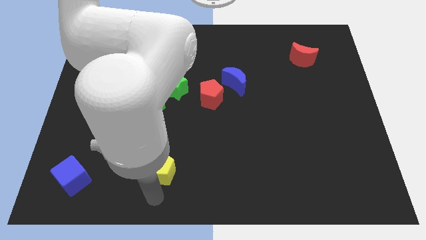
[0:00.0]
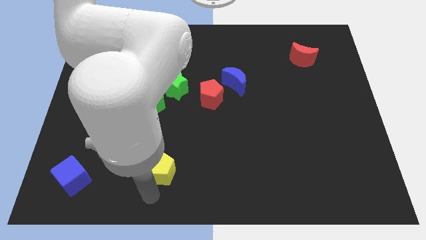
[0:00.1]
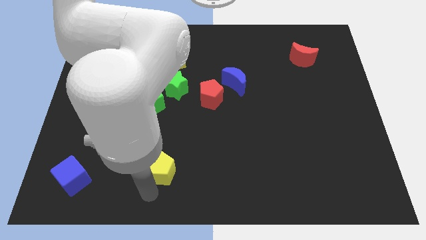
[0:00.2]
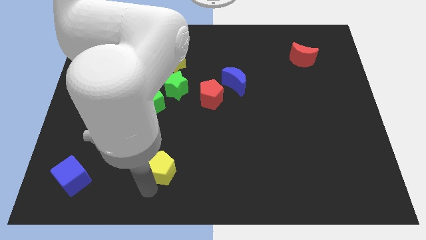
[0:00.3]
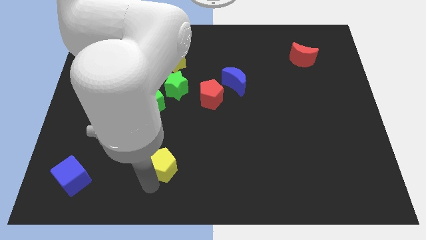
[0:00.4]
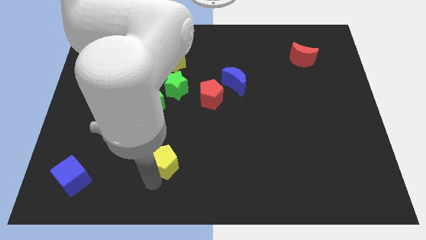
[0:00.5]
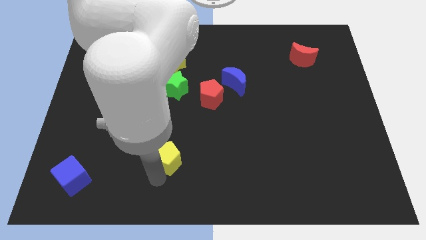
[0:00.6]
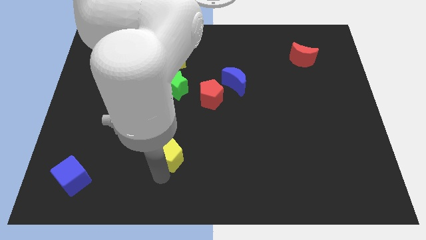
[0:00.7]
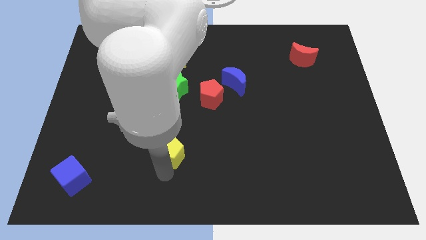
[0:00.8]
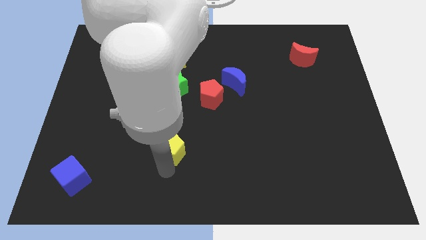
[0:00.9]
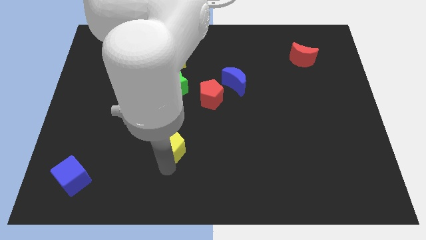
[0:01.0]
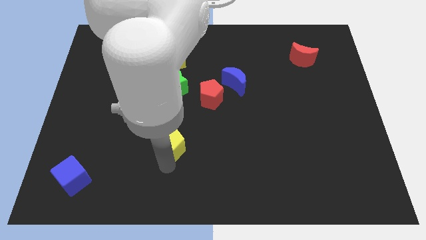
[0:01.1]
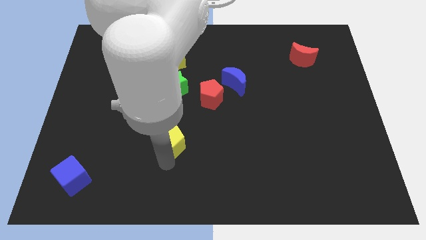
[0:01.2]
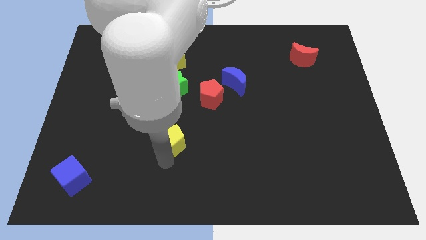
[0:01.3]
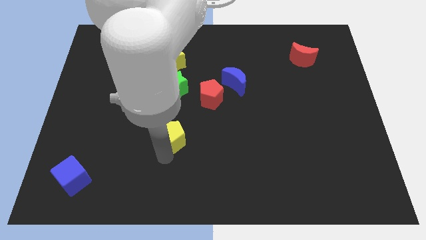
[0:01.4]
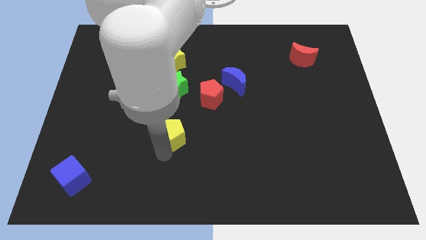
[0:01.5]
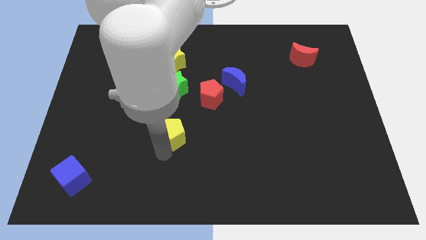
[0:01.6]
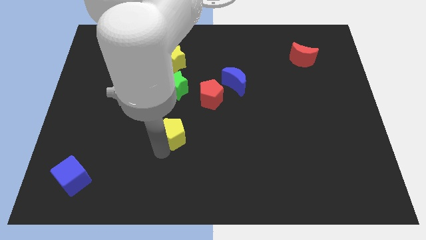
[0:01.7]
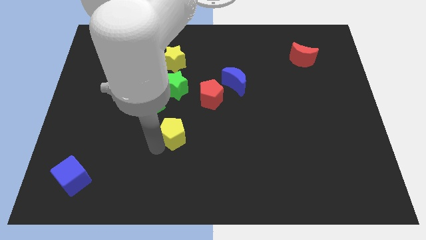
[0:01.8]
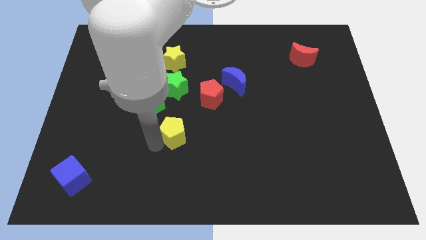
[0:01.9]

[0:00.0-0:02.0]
move the yellow pentagon towards the green star

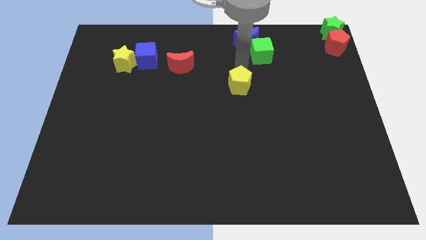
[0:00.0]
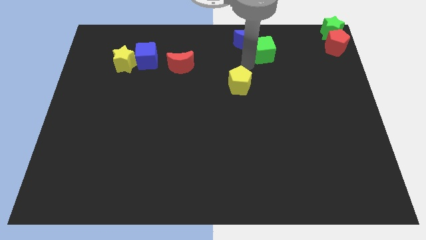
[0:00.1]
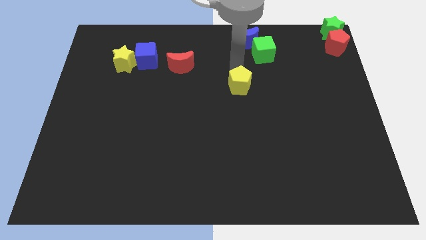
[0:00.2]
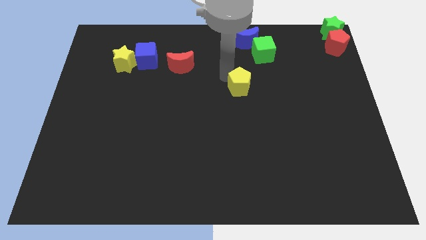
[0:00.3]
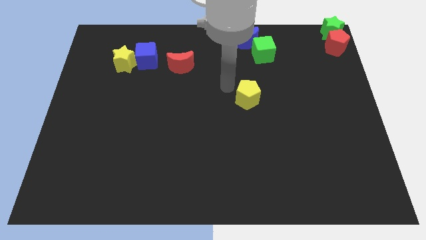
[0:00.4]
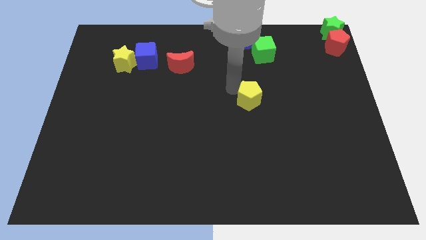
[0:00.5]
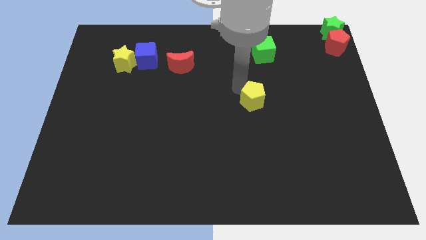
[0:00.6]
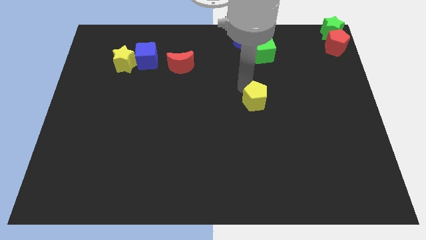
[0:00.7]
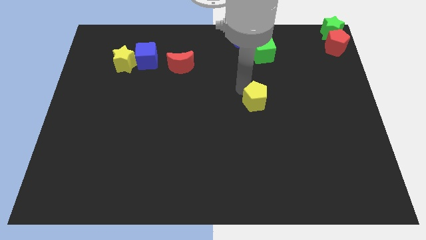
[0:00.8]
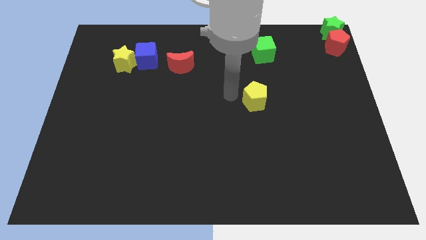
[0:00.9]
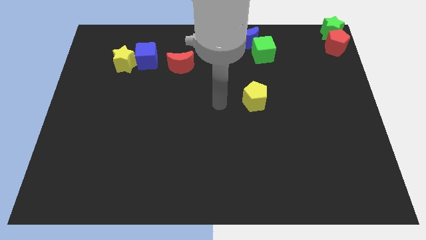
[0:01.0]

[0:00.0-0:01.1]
push the yellow pentagon slightly to the bottom of the board

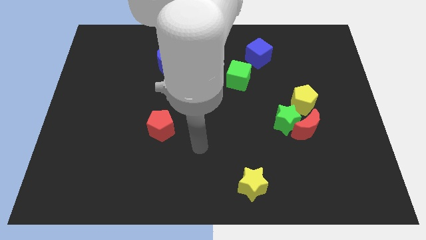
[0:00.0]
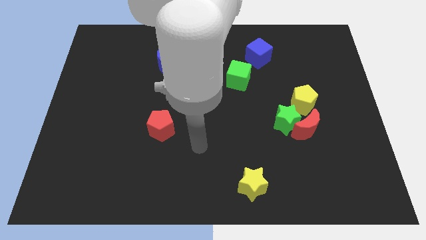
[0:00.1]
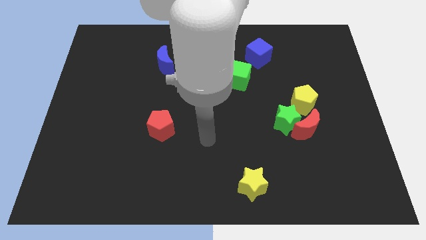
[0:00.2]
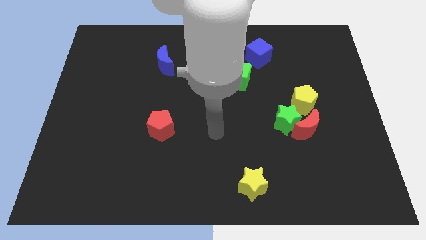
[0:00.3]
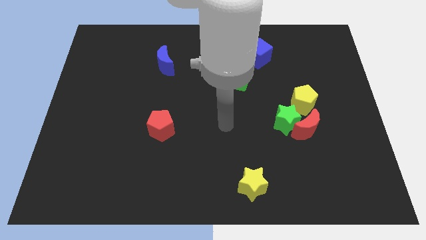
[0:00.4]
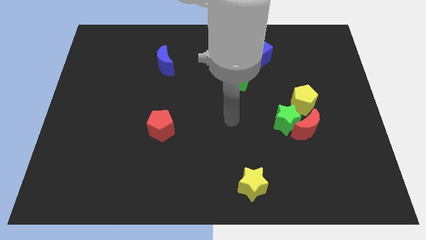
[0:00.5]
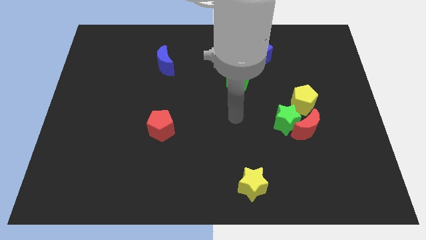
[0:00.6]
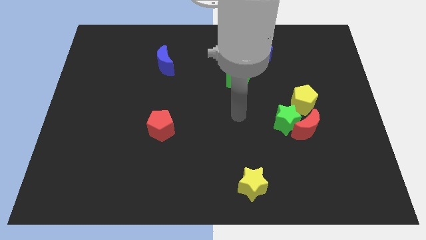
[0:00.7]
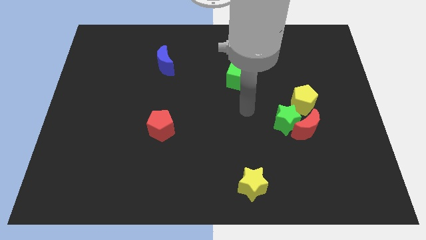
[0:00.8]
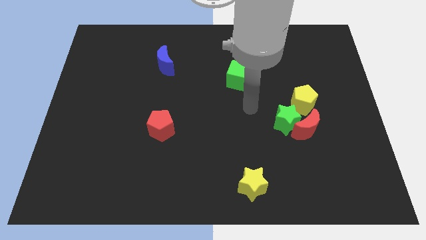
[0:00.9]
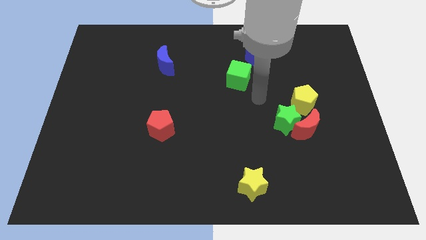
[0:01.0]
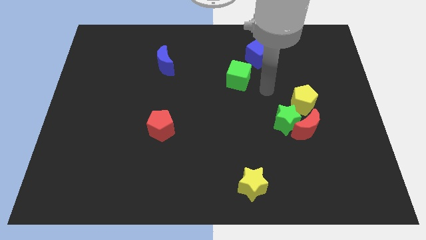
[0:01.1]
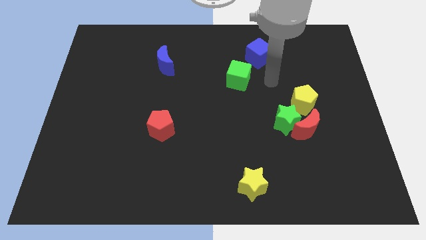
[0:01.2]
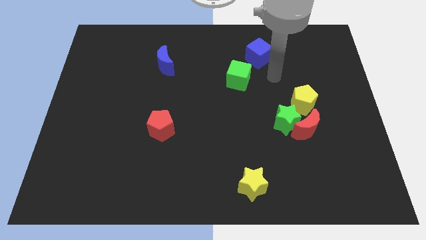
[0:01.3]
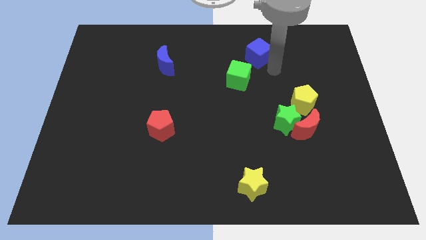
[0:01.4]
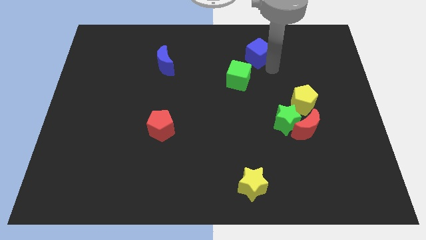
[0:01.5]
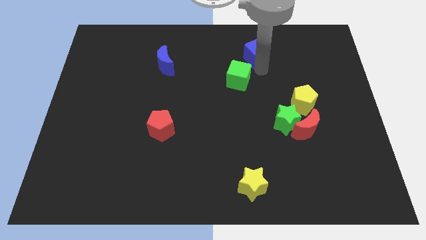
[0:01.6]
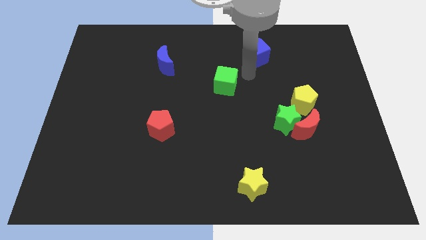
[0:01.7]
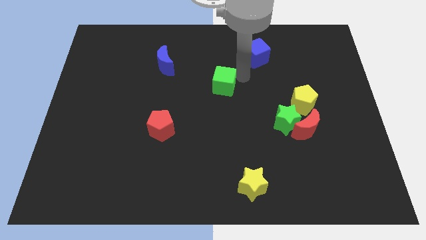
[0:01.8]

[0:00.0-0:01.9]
push the green cube away from the blue cube

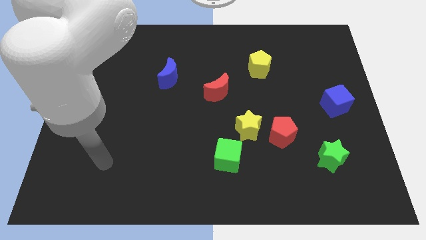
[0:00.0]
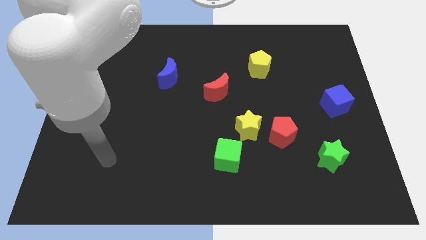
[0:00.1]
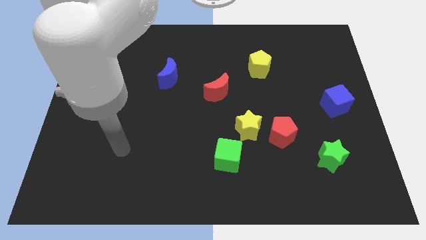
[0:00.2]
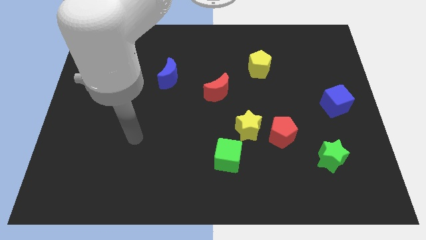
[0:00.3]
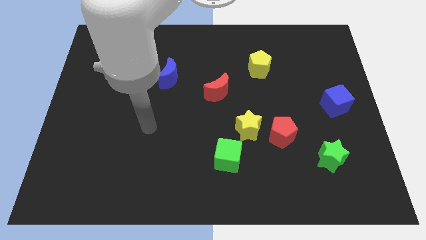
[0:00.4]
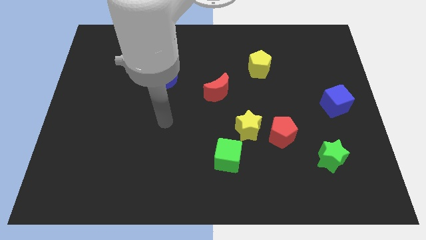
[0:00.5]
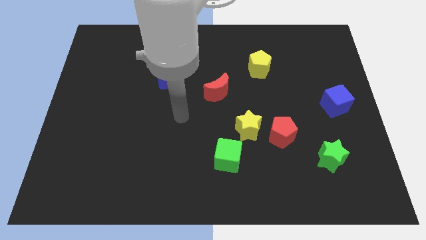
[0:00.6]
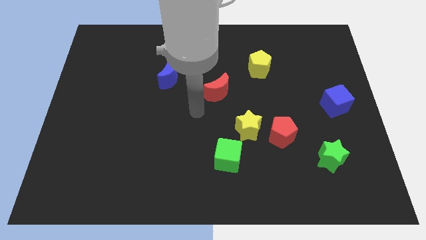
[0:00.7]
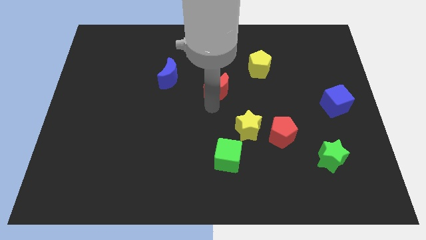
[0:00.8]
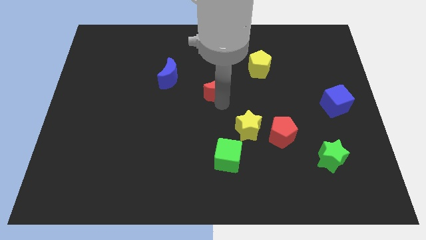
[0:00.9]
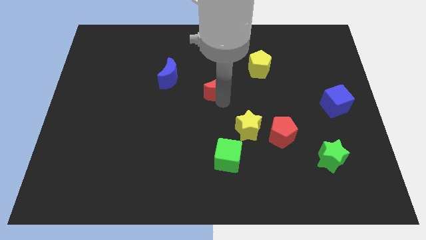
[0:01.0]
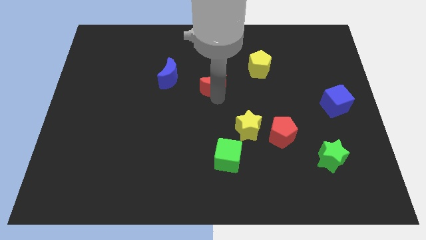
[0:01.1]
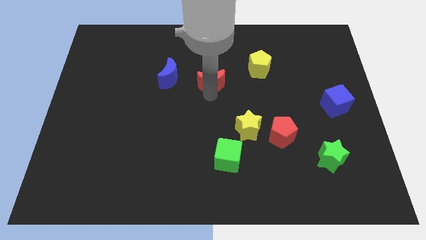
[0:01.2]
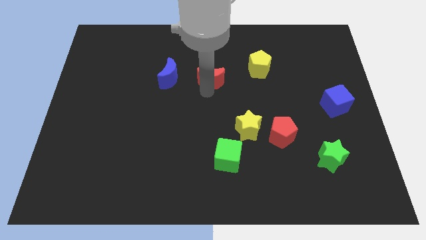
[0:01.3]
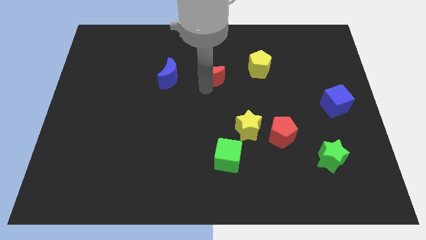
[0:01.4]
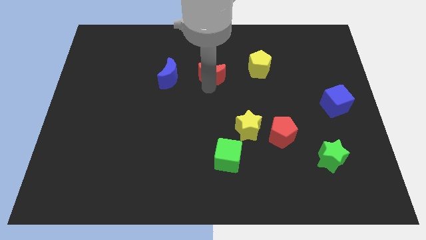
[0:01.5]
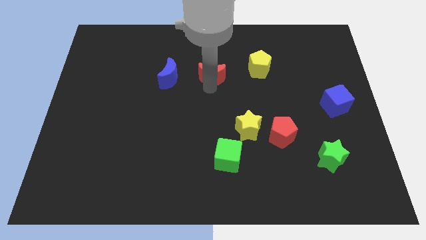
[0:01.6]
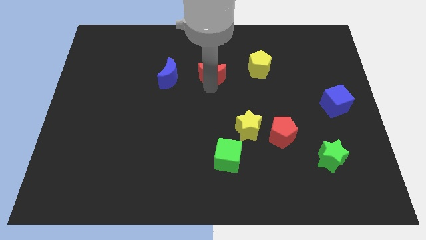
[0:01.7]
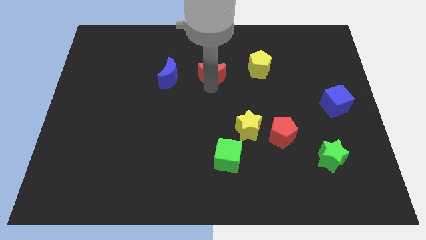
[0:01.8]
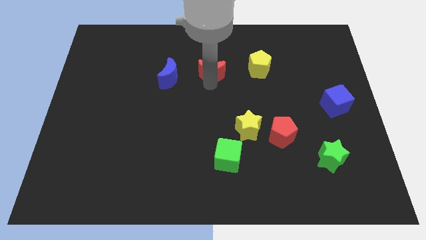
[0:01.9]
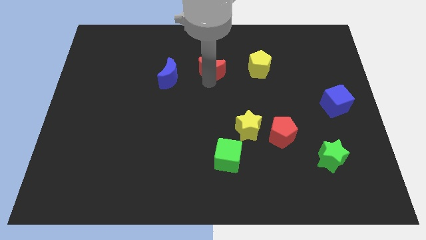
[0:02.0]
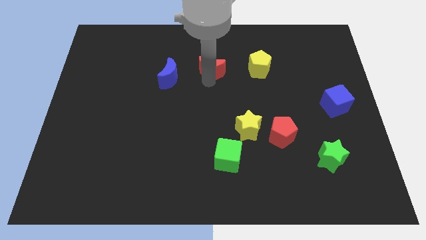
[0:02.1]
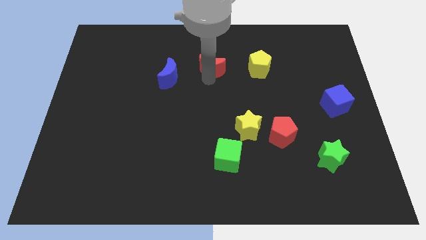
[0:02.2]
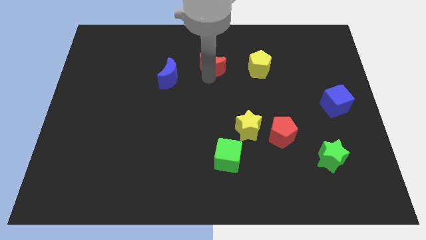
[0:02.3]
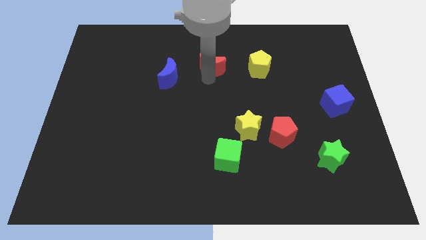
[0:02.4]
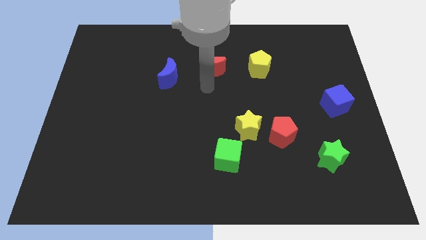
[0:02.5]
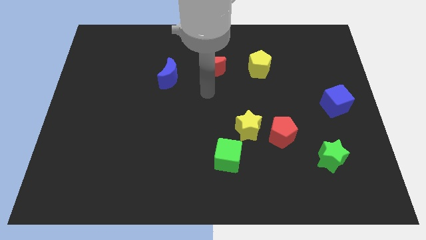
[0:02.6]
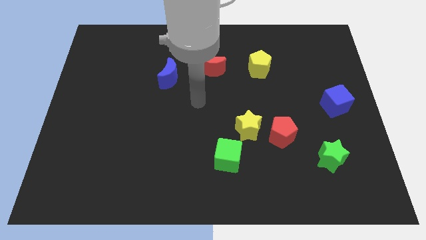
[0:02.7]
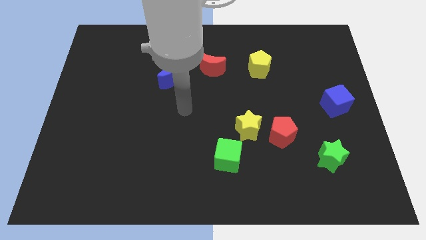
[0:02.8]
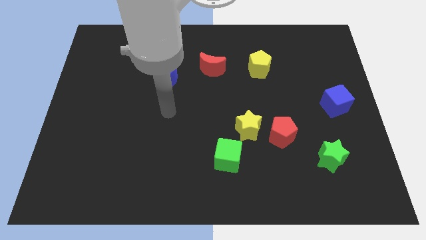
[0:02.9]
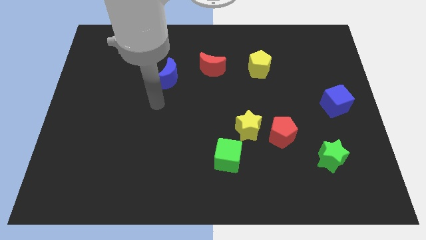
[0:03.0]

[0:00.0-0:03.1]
push red moon up a bit

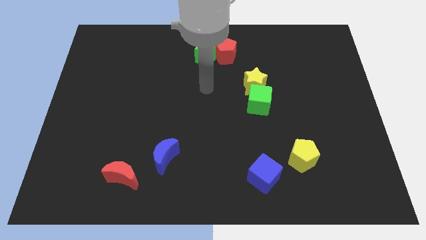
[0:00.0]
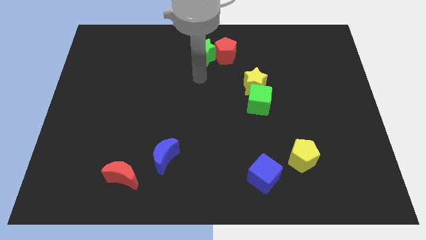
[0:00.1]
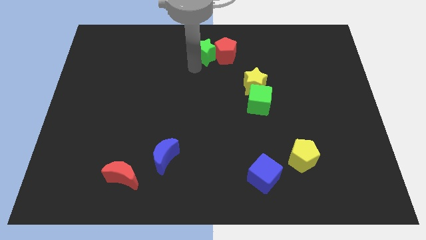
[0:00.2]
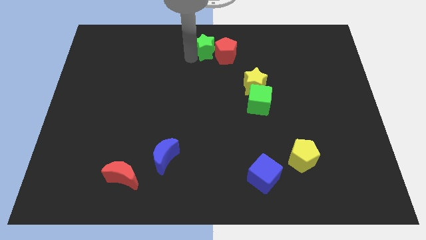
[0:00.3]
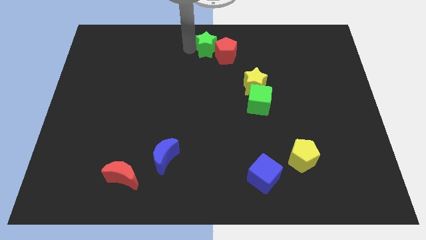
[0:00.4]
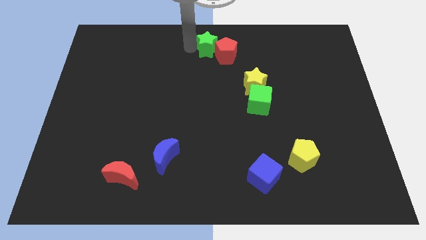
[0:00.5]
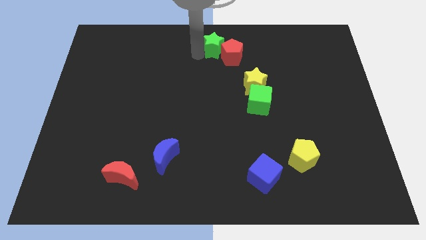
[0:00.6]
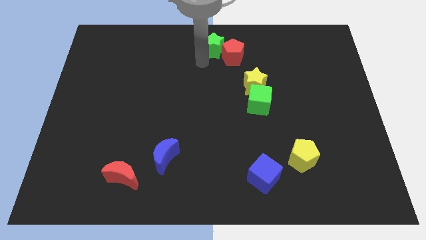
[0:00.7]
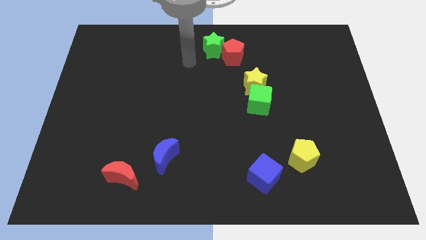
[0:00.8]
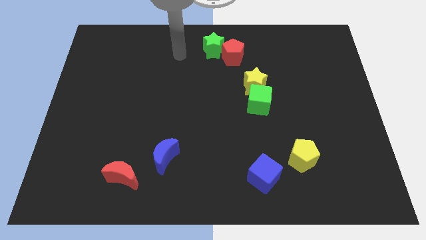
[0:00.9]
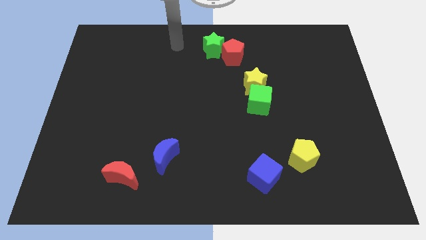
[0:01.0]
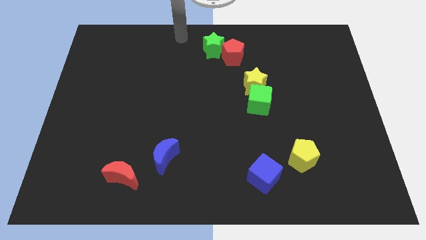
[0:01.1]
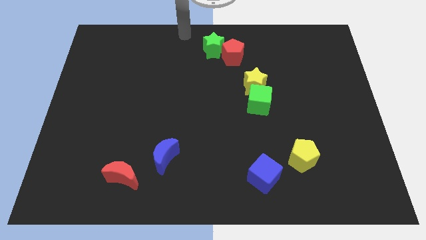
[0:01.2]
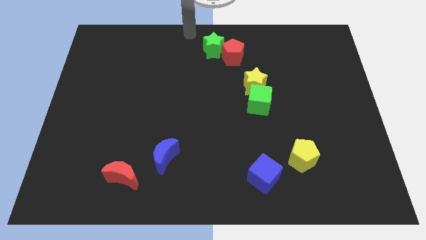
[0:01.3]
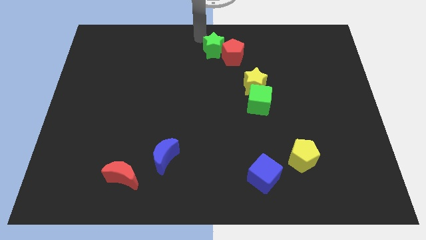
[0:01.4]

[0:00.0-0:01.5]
push the green star to the left of the red pentagon
